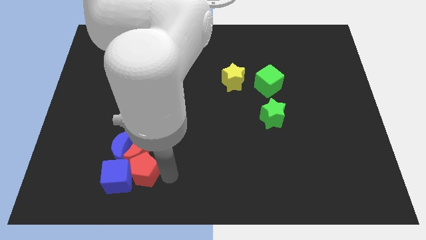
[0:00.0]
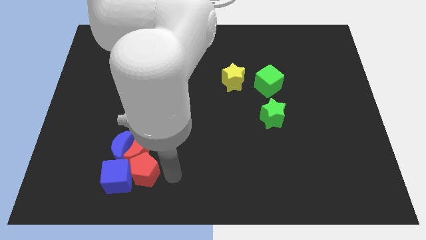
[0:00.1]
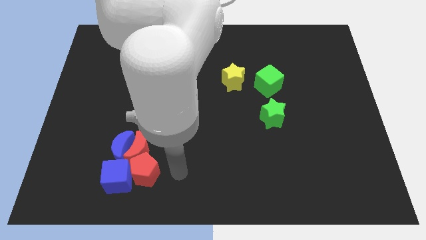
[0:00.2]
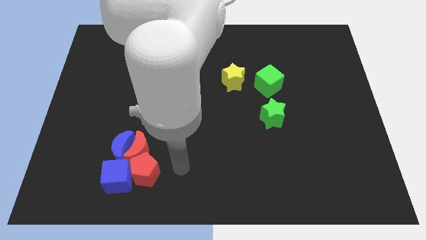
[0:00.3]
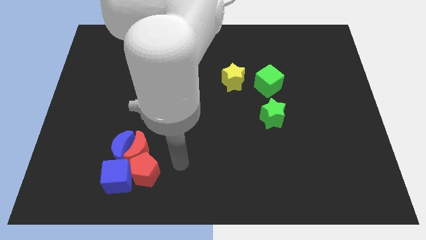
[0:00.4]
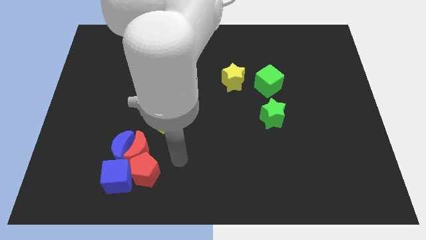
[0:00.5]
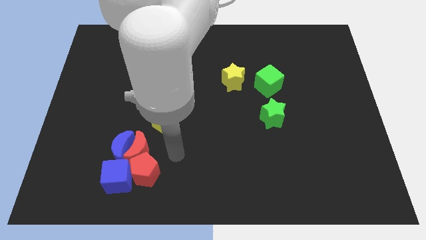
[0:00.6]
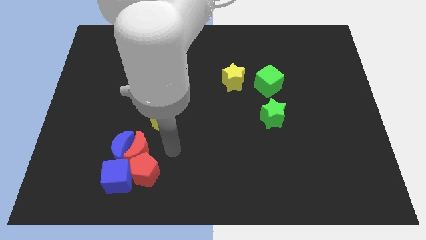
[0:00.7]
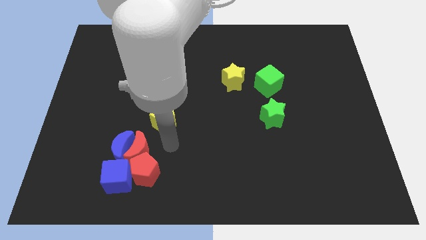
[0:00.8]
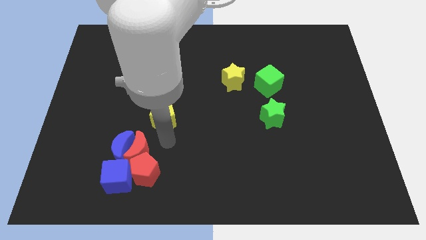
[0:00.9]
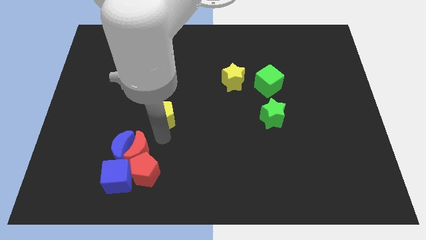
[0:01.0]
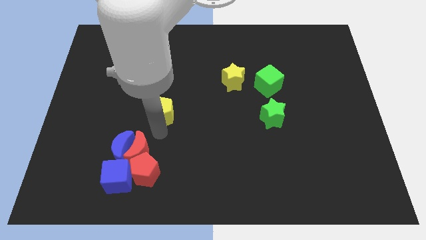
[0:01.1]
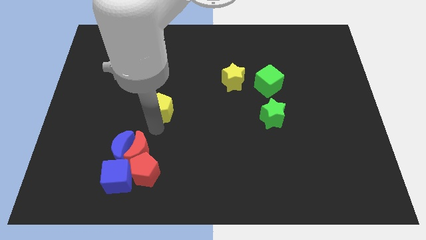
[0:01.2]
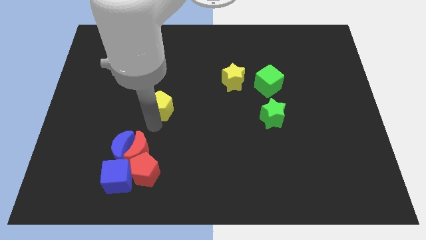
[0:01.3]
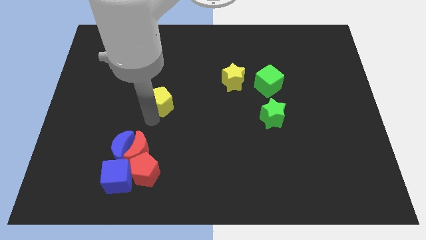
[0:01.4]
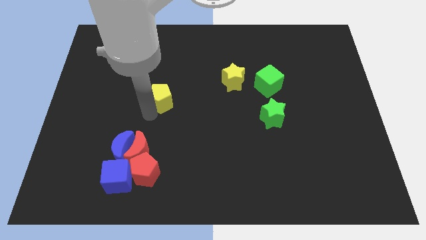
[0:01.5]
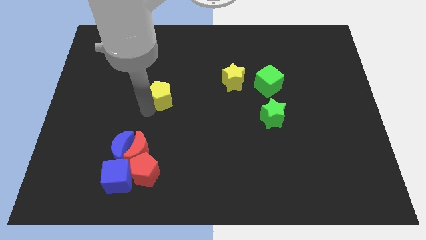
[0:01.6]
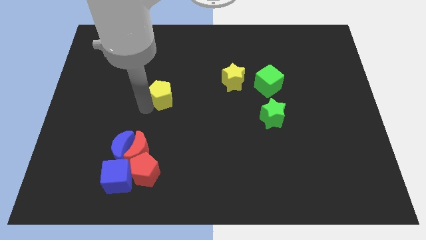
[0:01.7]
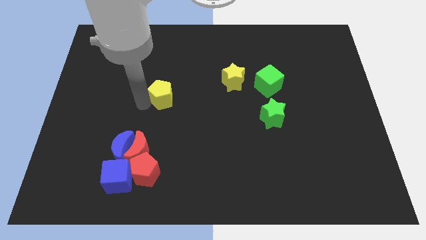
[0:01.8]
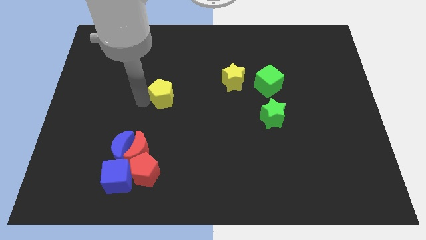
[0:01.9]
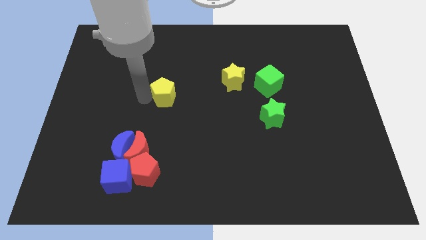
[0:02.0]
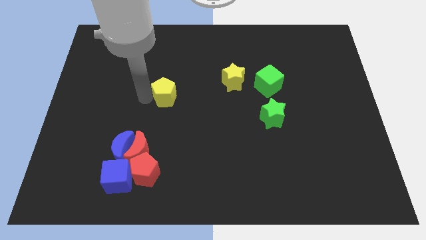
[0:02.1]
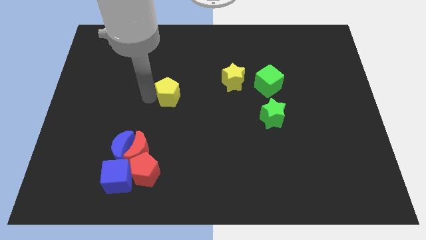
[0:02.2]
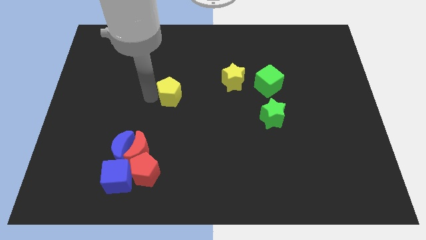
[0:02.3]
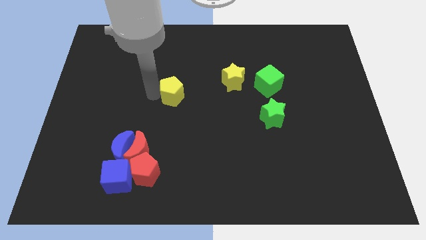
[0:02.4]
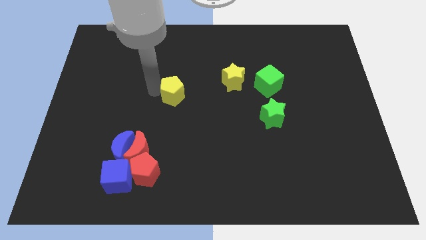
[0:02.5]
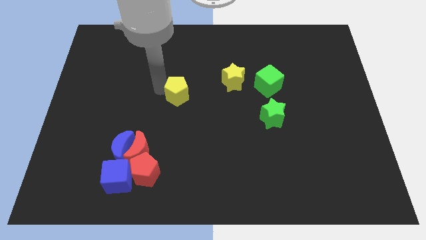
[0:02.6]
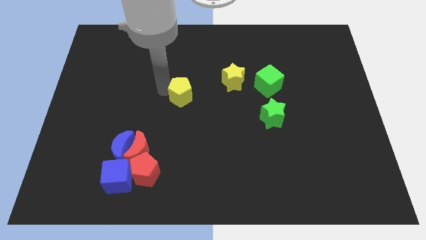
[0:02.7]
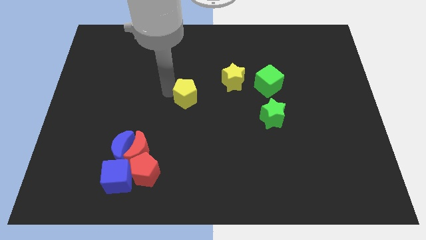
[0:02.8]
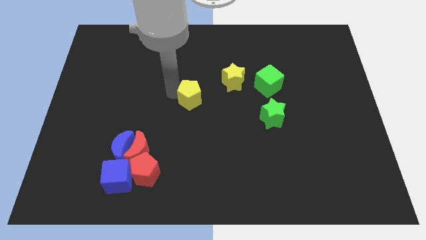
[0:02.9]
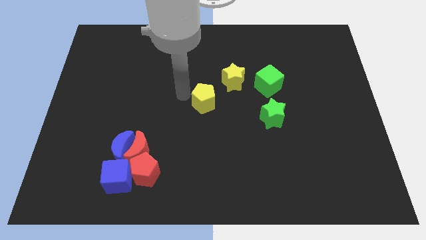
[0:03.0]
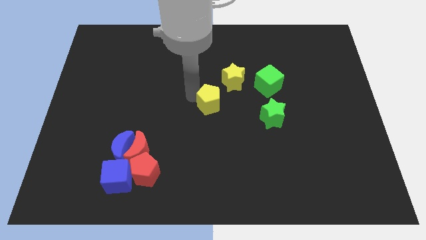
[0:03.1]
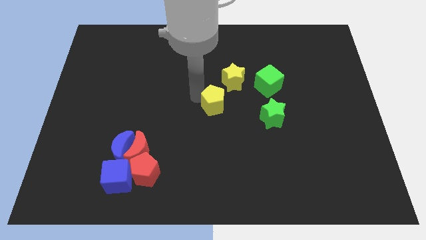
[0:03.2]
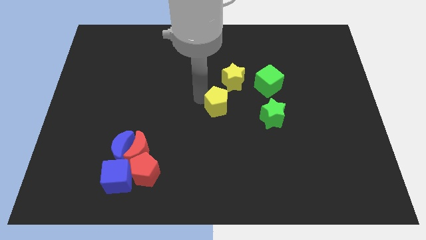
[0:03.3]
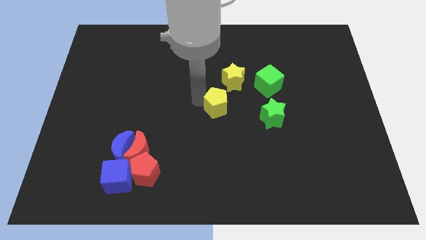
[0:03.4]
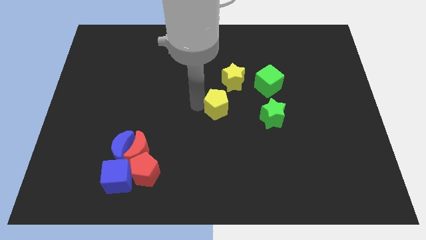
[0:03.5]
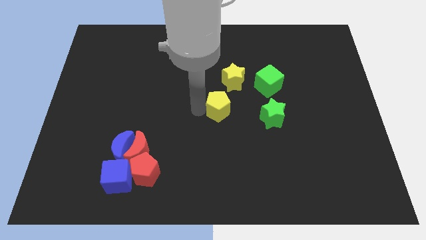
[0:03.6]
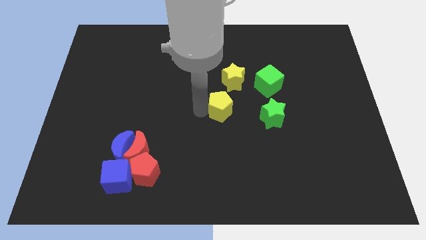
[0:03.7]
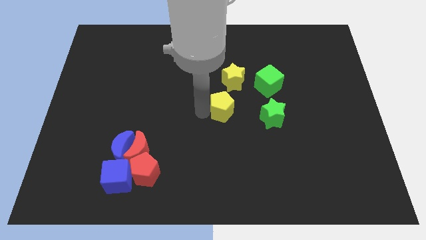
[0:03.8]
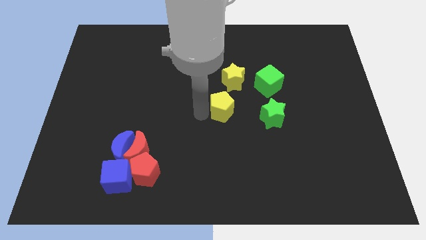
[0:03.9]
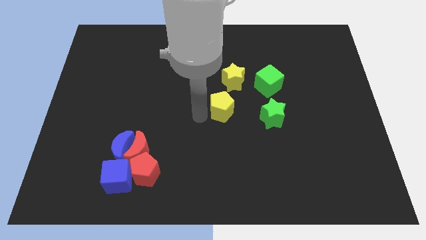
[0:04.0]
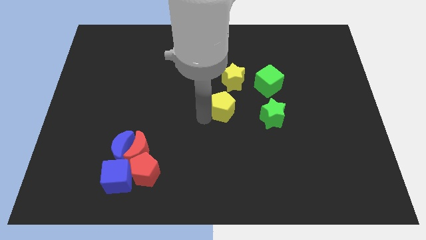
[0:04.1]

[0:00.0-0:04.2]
move the yellow pentagon to the center of the board

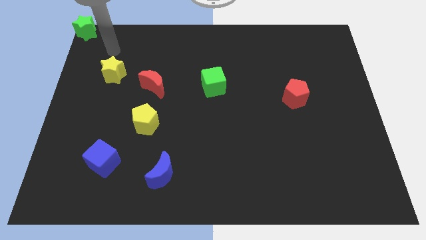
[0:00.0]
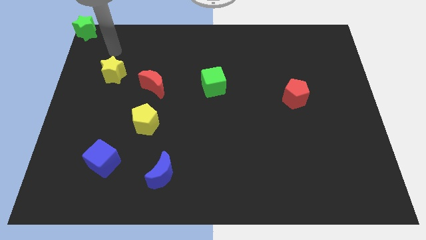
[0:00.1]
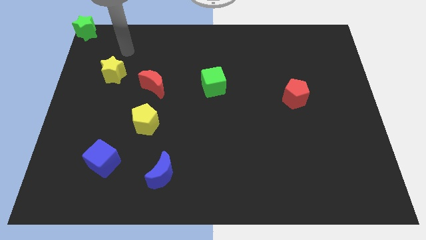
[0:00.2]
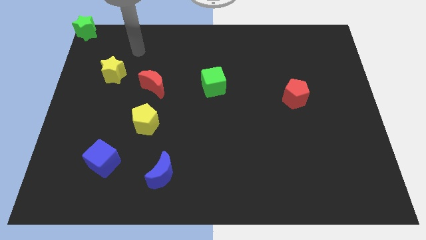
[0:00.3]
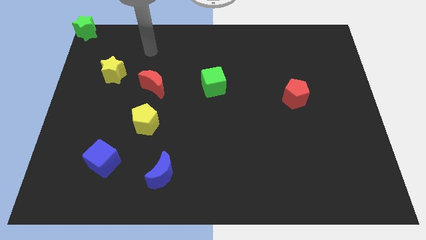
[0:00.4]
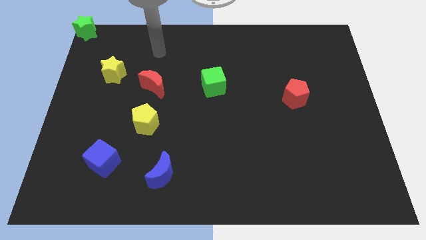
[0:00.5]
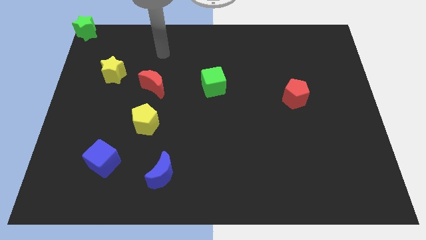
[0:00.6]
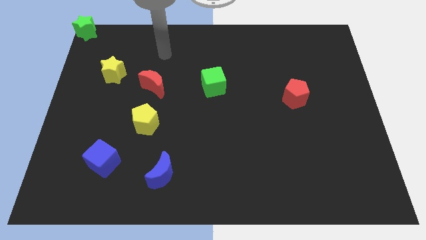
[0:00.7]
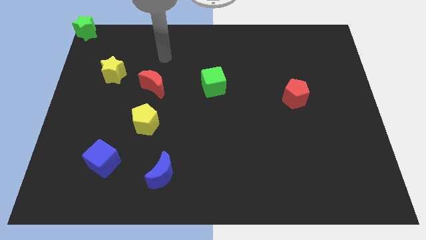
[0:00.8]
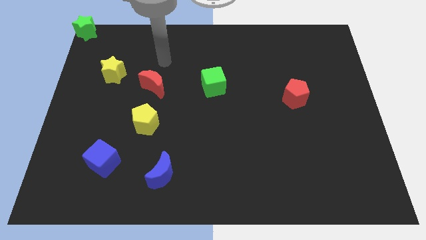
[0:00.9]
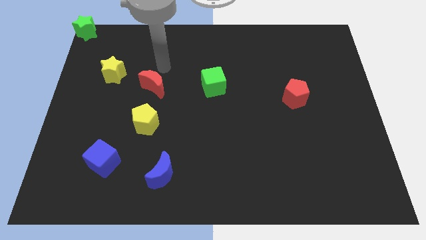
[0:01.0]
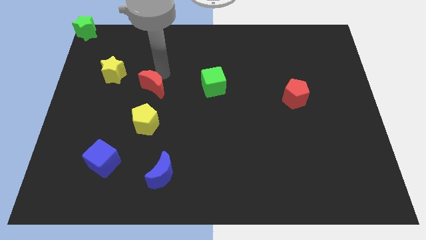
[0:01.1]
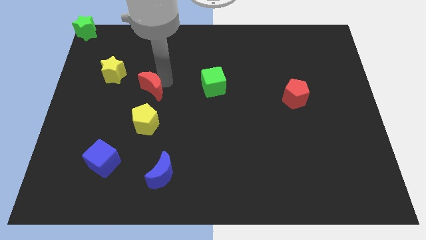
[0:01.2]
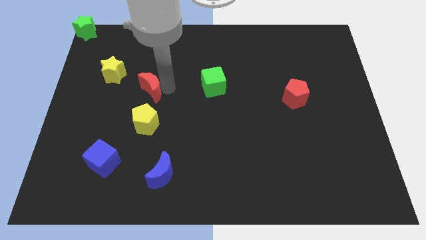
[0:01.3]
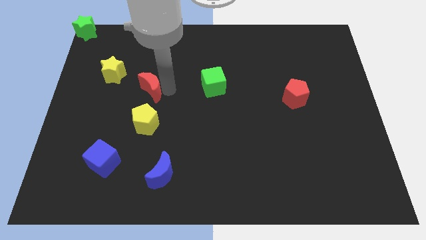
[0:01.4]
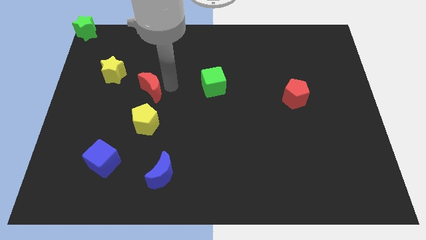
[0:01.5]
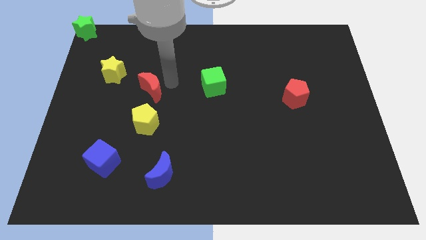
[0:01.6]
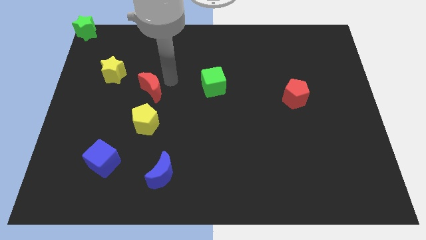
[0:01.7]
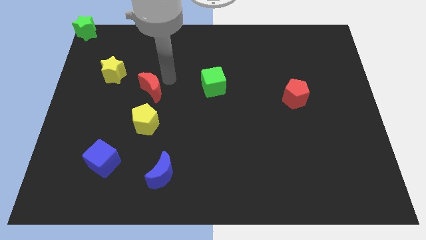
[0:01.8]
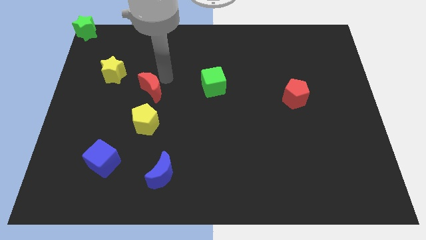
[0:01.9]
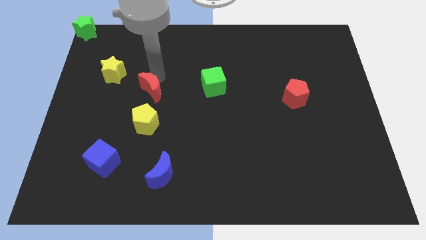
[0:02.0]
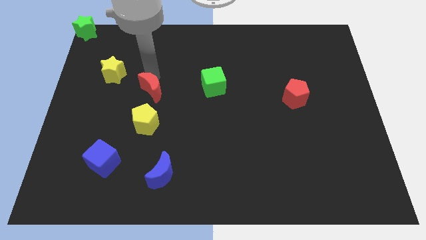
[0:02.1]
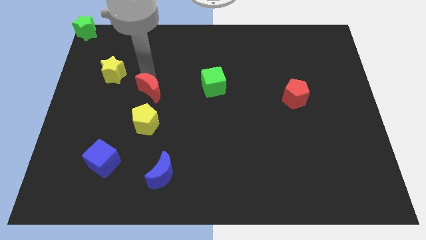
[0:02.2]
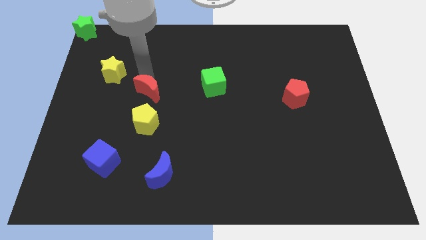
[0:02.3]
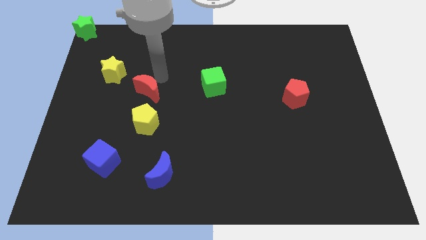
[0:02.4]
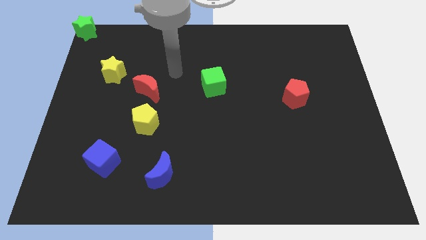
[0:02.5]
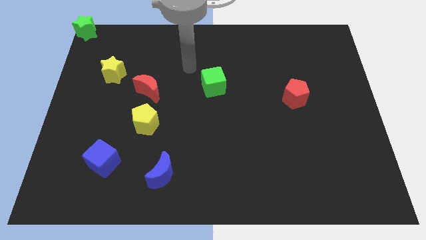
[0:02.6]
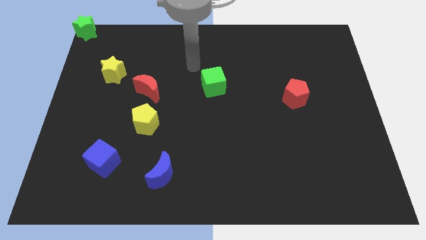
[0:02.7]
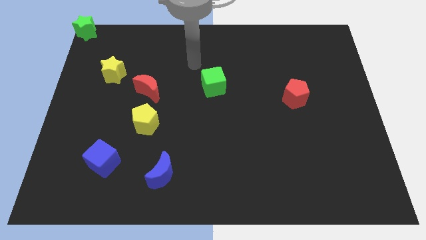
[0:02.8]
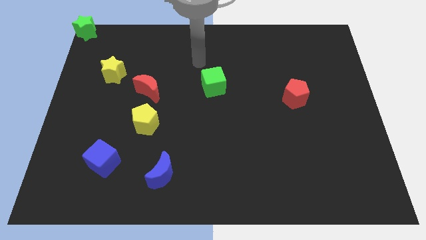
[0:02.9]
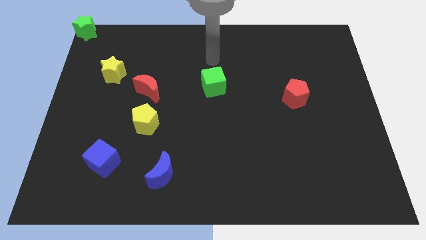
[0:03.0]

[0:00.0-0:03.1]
push red crescent slightly towards the bottom right of the yellow star

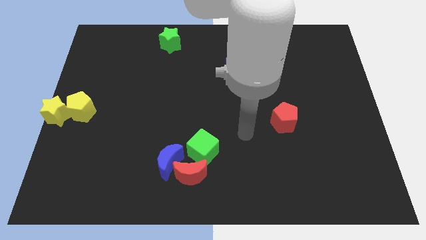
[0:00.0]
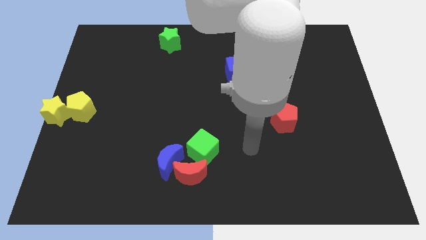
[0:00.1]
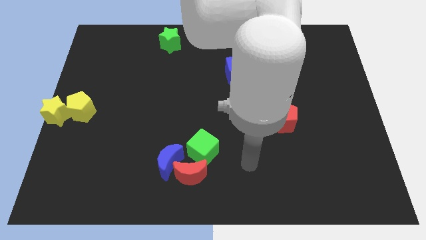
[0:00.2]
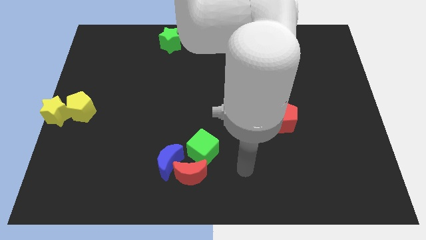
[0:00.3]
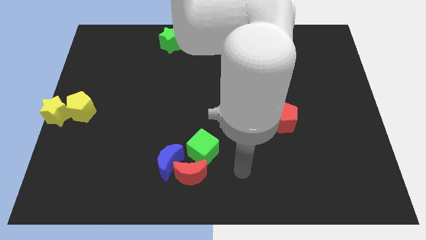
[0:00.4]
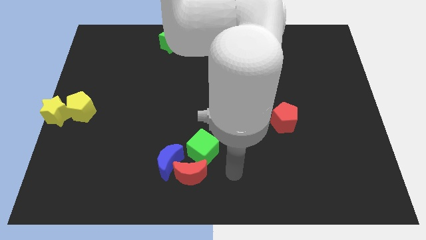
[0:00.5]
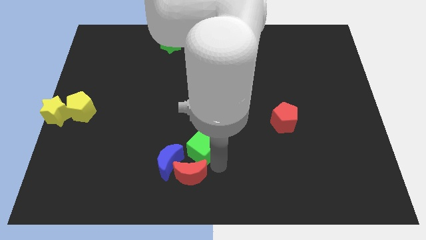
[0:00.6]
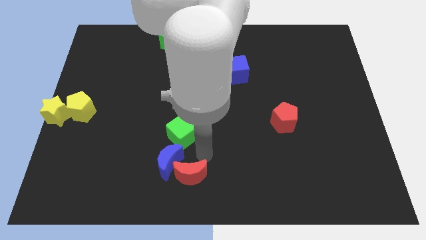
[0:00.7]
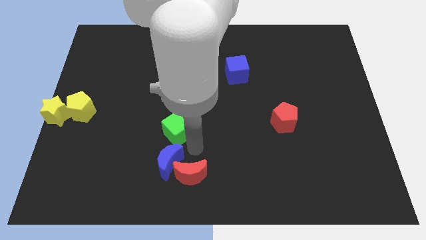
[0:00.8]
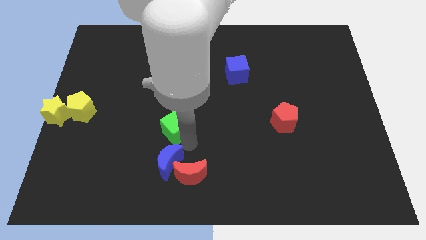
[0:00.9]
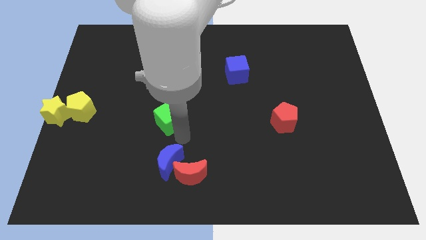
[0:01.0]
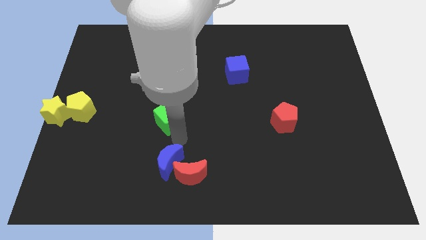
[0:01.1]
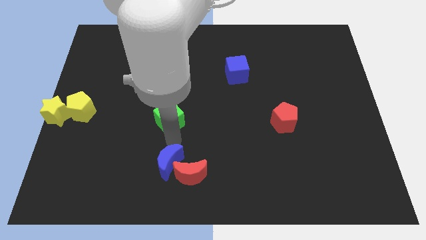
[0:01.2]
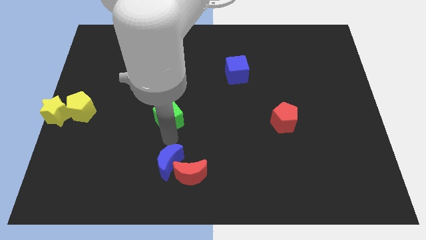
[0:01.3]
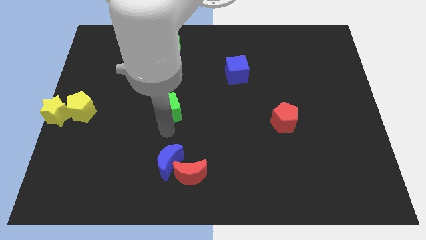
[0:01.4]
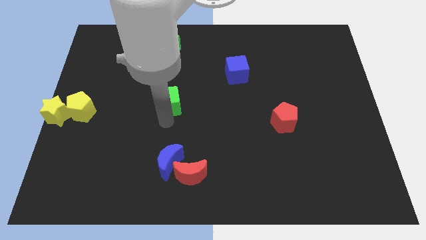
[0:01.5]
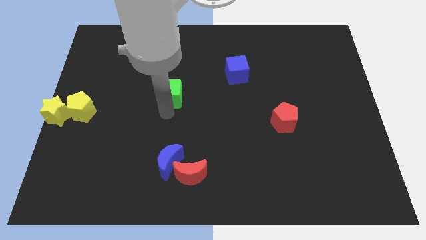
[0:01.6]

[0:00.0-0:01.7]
separate green cube from red moon and blue moon
